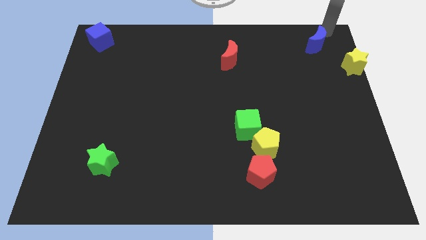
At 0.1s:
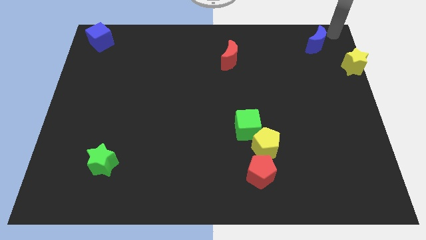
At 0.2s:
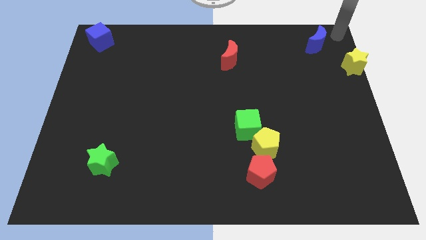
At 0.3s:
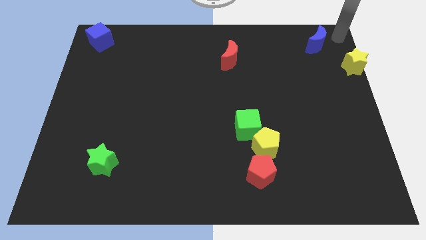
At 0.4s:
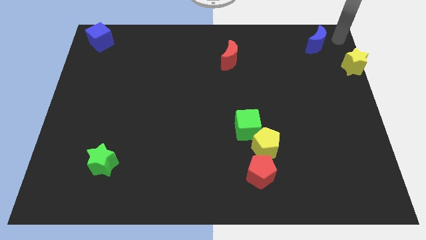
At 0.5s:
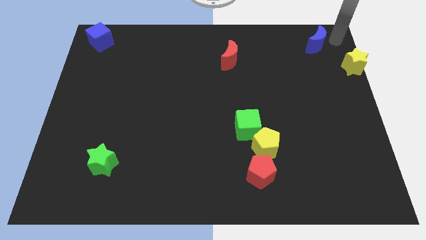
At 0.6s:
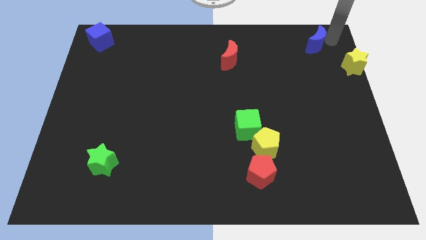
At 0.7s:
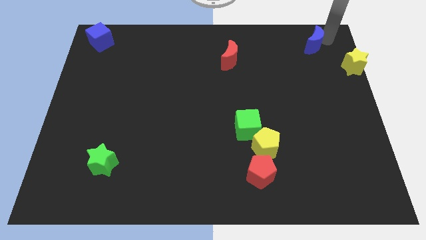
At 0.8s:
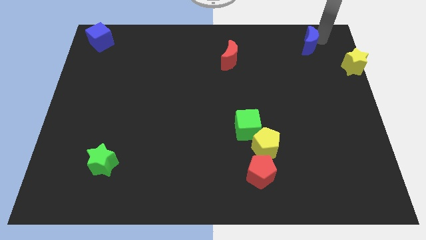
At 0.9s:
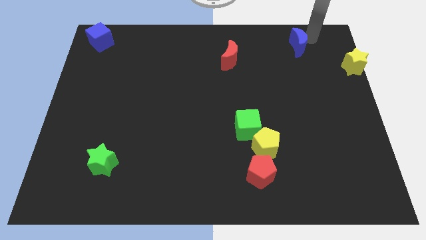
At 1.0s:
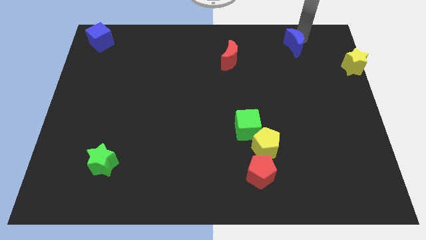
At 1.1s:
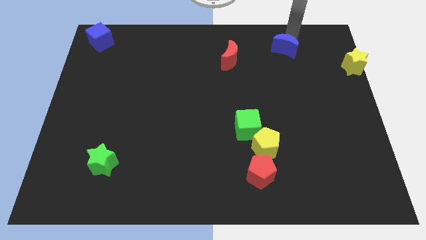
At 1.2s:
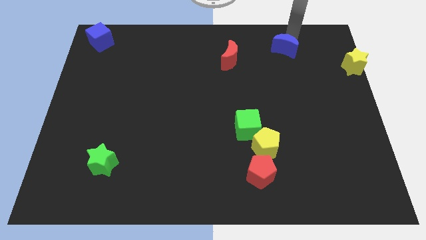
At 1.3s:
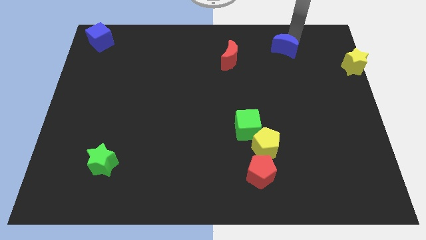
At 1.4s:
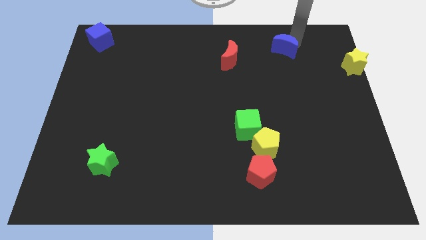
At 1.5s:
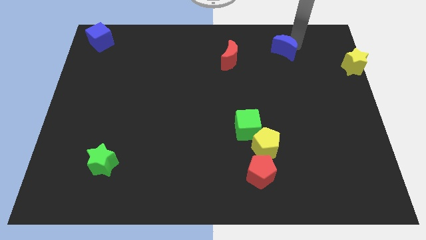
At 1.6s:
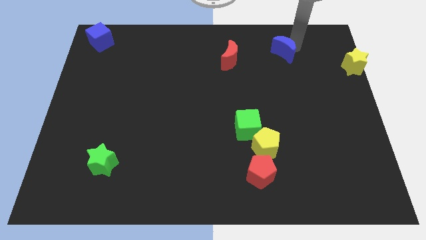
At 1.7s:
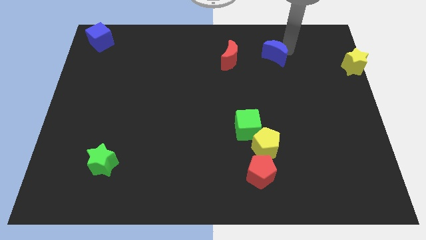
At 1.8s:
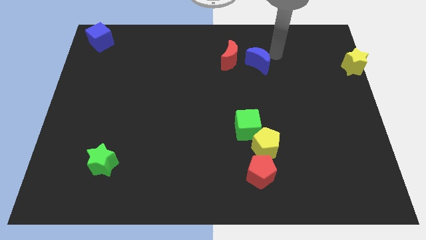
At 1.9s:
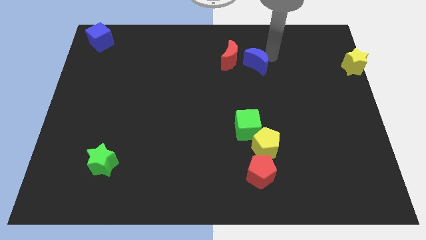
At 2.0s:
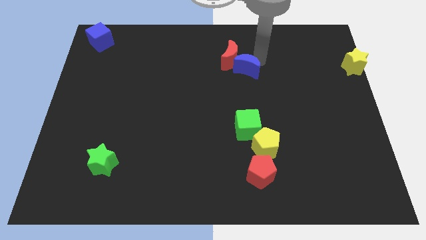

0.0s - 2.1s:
slide blue moon to the bottom right of red moon

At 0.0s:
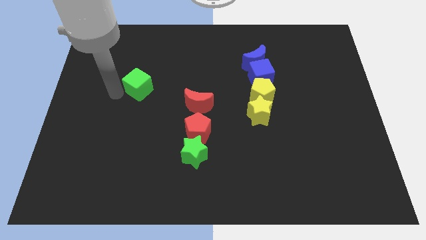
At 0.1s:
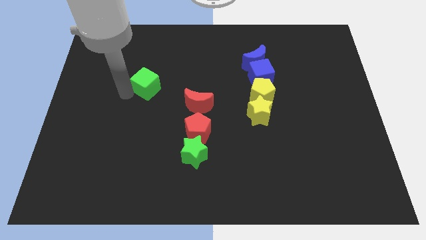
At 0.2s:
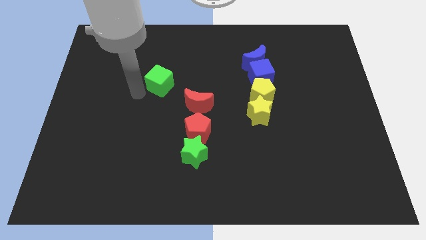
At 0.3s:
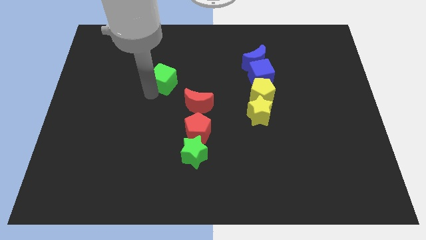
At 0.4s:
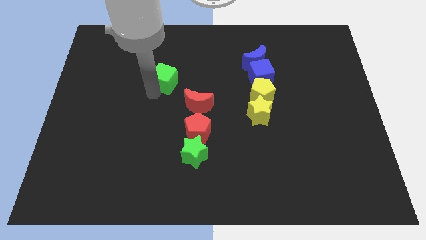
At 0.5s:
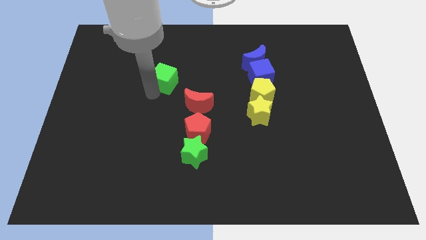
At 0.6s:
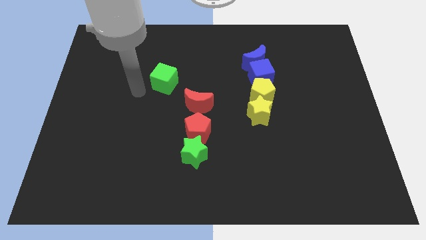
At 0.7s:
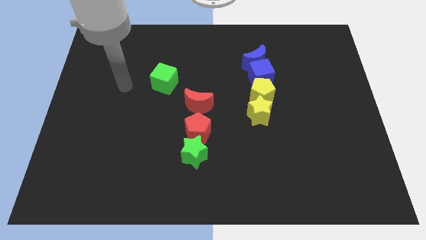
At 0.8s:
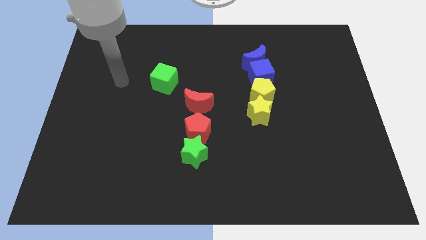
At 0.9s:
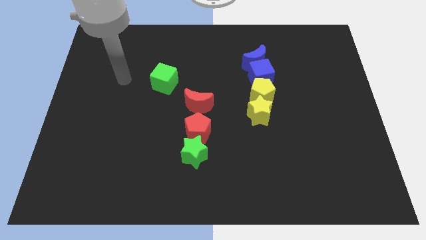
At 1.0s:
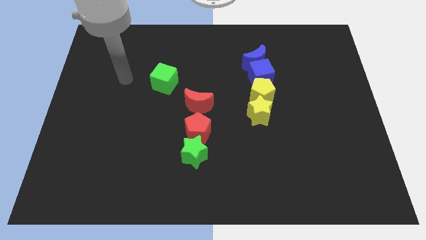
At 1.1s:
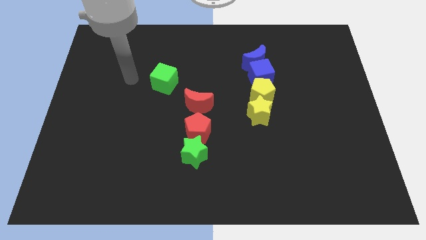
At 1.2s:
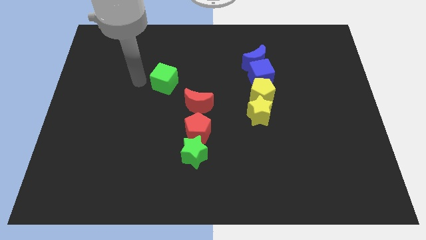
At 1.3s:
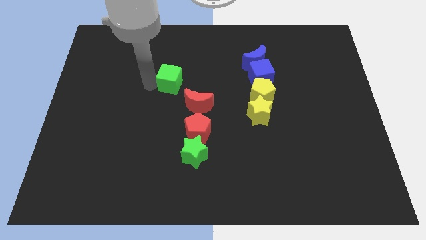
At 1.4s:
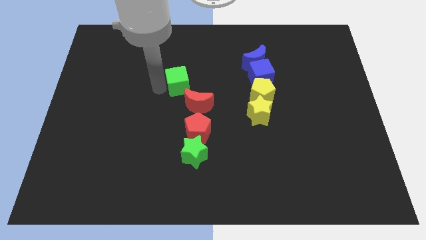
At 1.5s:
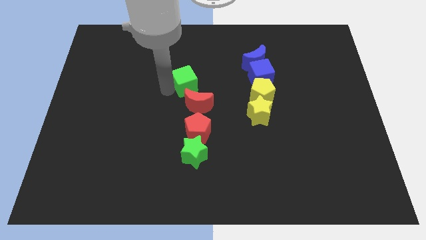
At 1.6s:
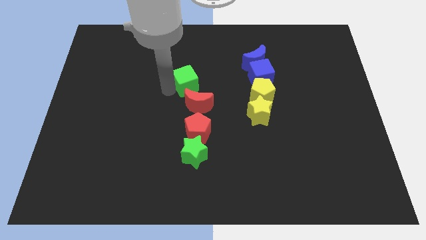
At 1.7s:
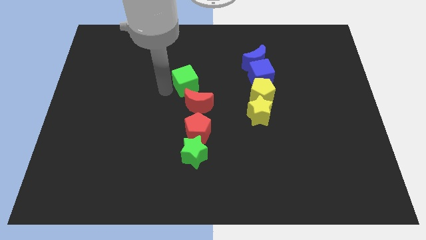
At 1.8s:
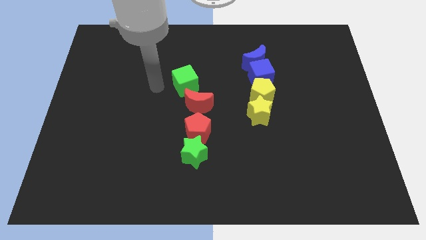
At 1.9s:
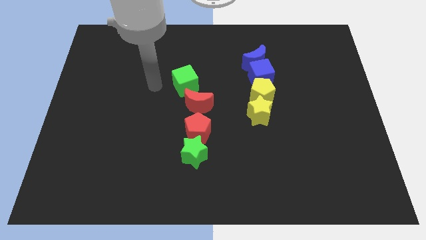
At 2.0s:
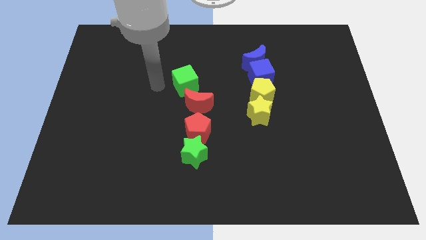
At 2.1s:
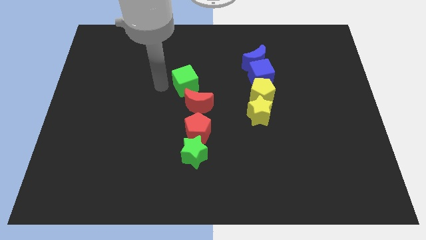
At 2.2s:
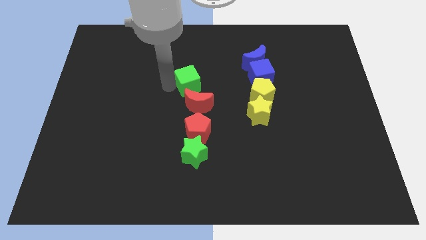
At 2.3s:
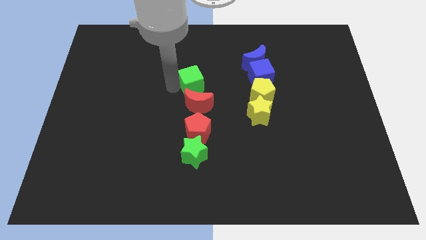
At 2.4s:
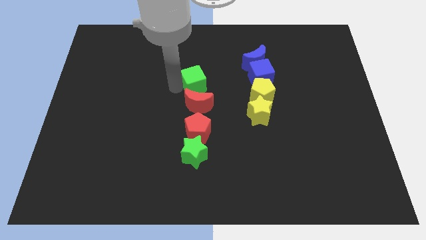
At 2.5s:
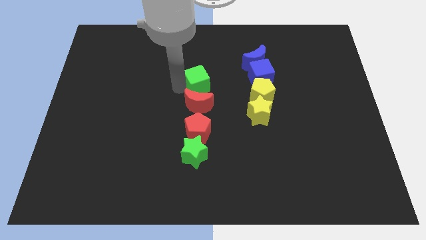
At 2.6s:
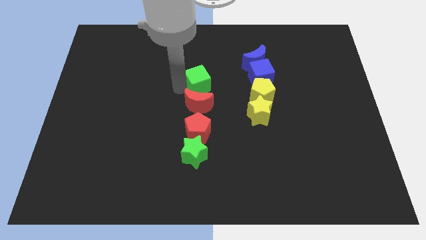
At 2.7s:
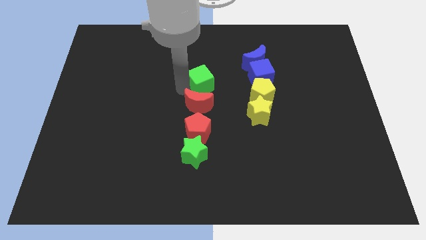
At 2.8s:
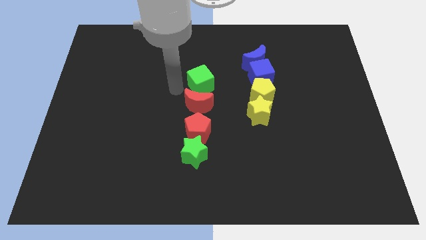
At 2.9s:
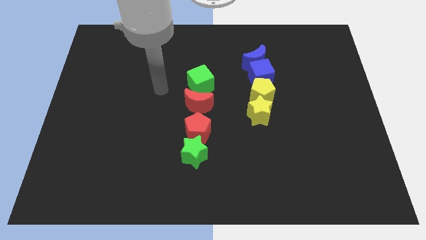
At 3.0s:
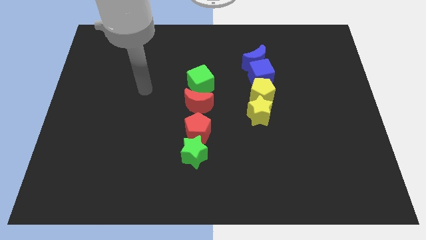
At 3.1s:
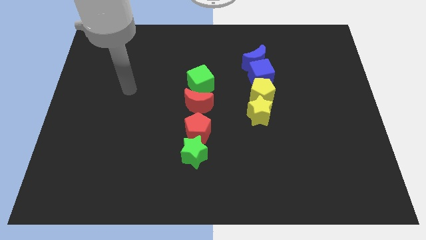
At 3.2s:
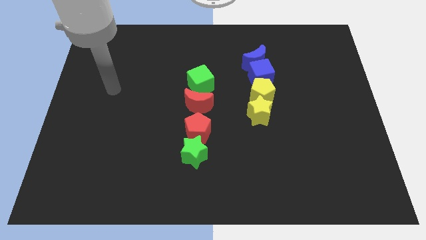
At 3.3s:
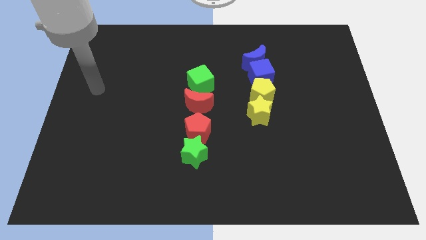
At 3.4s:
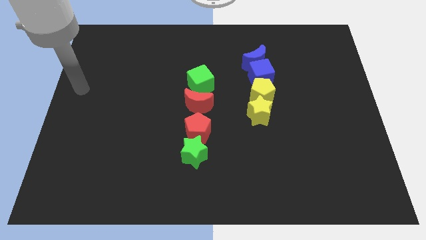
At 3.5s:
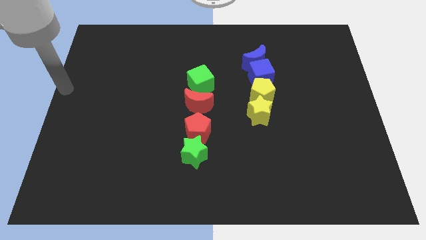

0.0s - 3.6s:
put the green cube to the top side of the red crescent

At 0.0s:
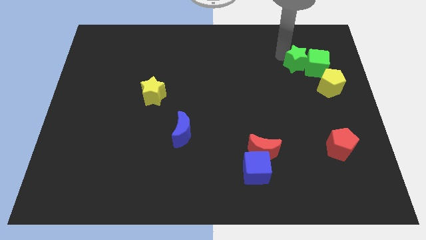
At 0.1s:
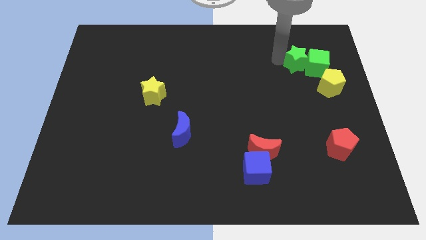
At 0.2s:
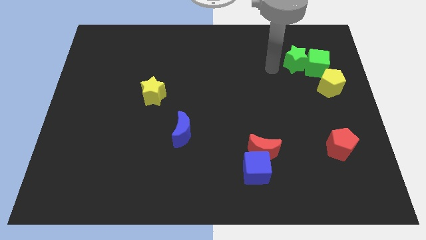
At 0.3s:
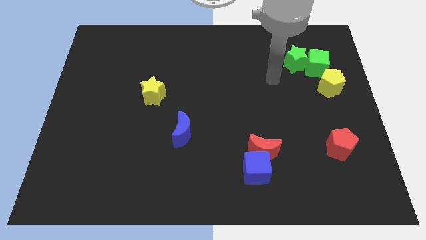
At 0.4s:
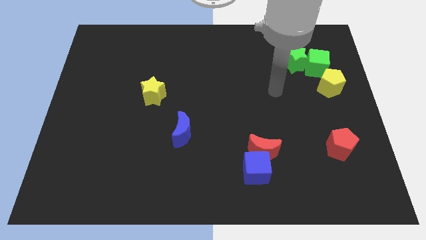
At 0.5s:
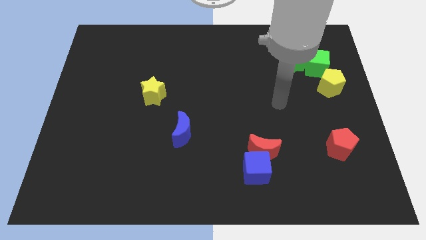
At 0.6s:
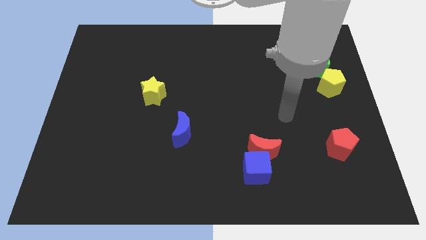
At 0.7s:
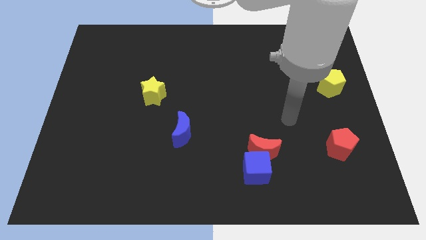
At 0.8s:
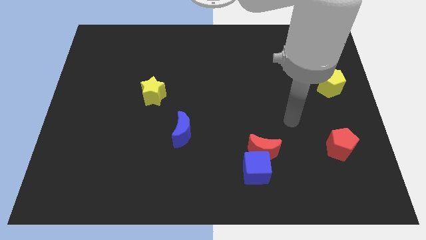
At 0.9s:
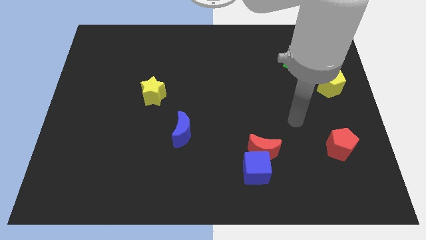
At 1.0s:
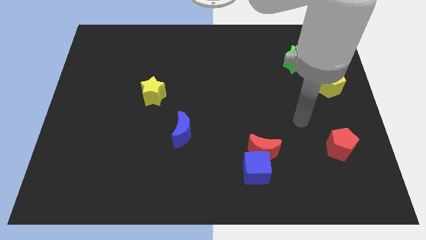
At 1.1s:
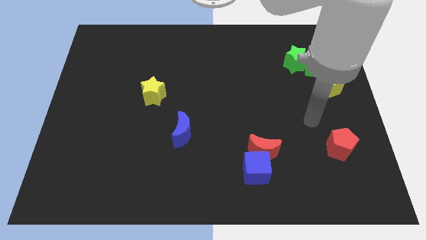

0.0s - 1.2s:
move your arm away from the green star

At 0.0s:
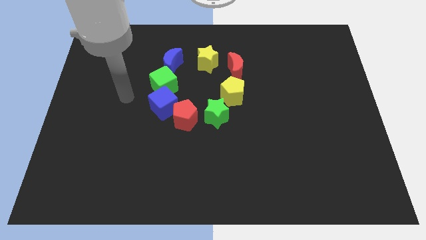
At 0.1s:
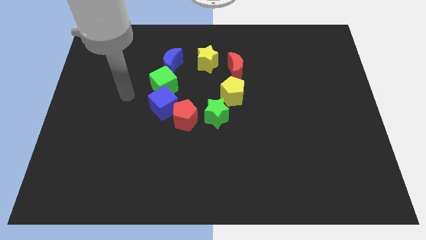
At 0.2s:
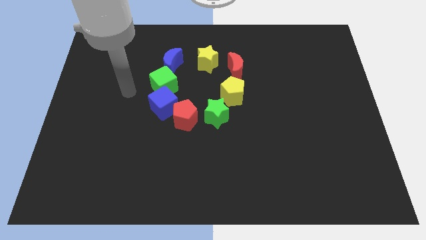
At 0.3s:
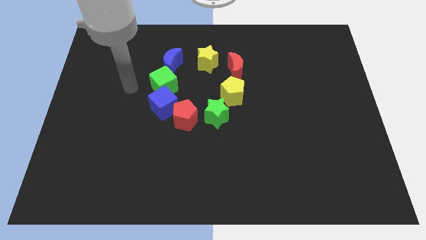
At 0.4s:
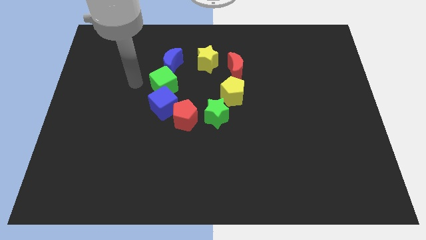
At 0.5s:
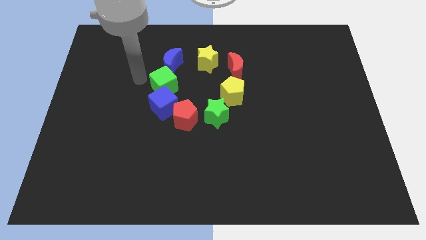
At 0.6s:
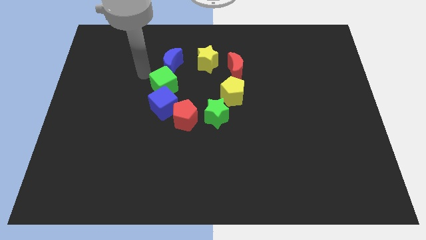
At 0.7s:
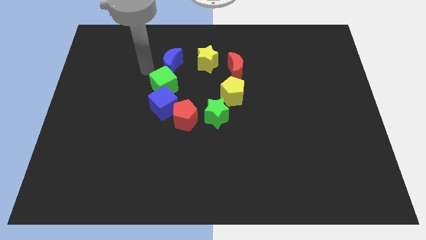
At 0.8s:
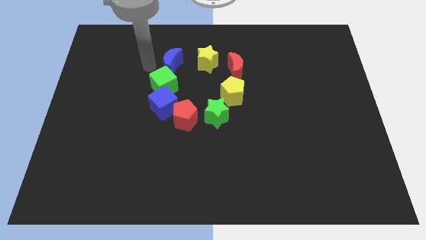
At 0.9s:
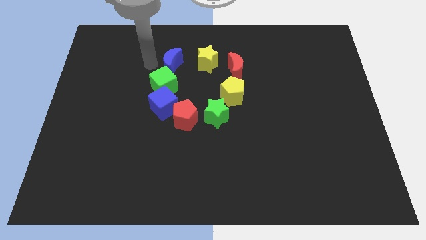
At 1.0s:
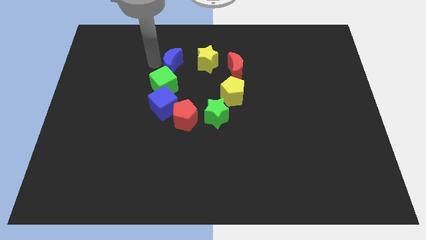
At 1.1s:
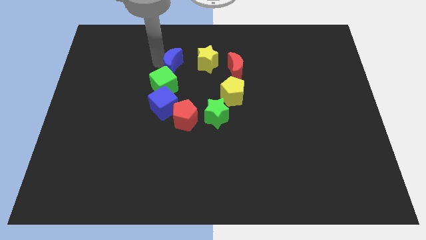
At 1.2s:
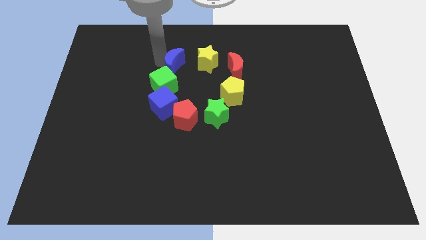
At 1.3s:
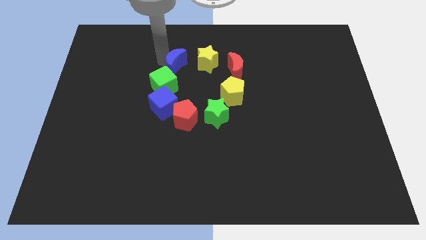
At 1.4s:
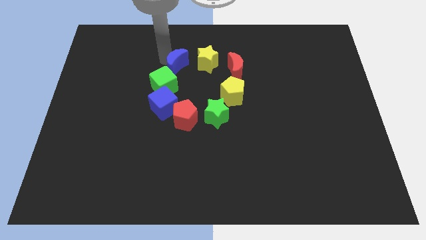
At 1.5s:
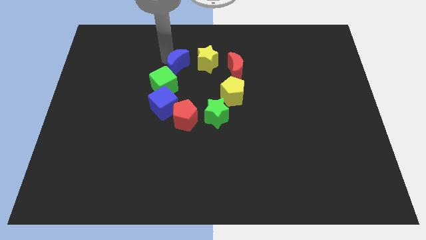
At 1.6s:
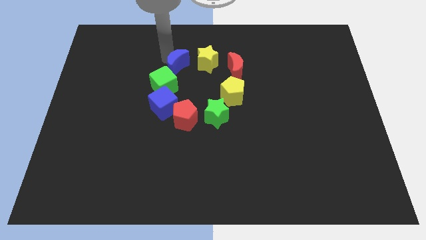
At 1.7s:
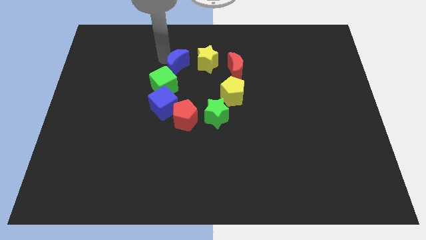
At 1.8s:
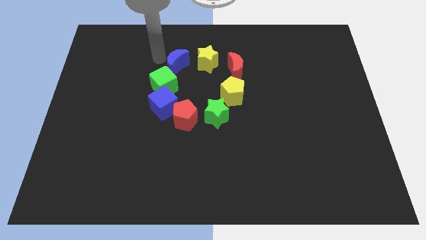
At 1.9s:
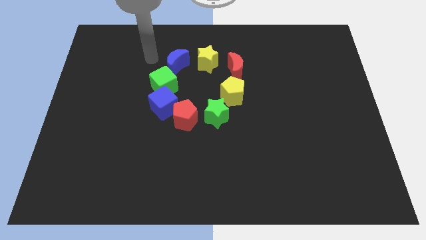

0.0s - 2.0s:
move the blue moon slightly to the right

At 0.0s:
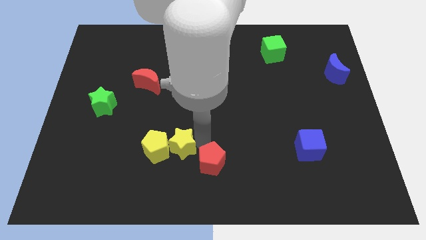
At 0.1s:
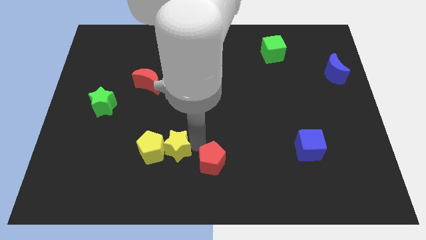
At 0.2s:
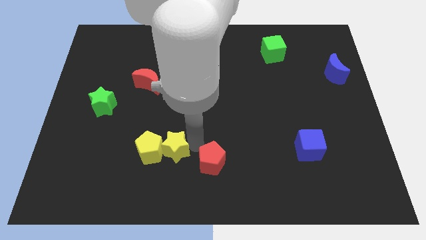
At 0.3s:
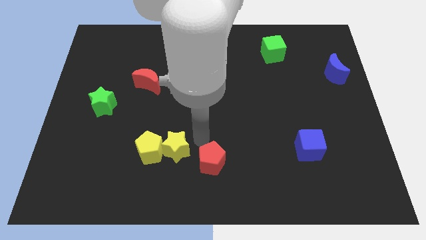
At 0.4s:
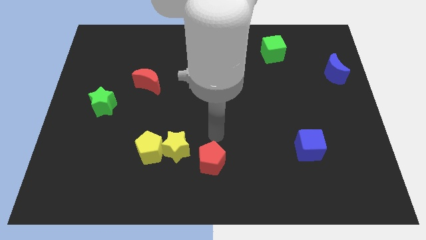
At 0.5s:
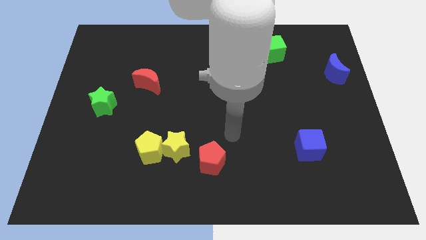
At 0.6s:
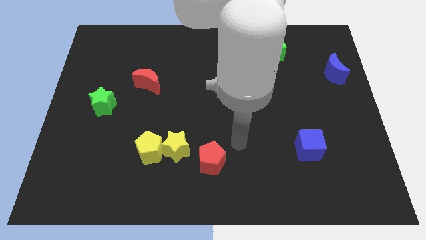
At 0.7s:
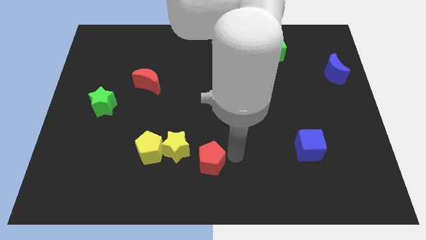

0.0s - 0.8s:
push yellow star and pentagon towards left
